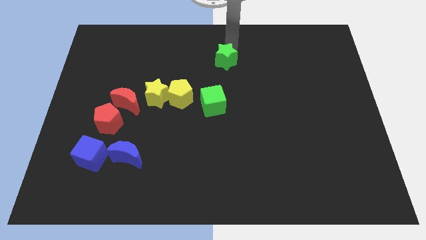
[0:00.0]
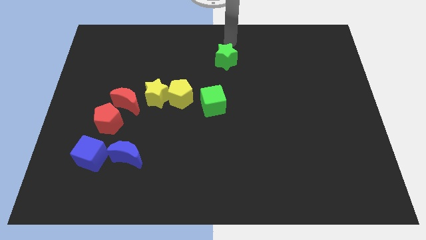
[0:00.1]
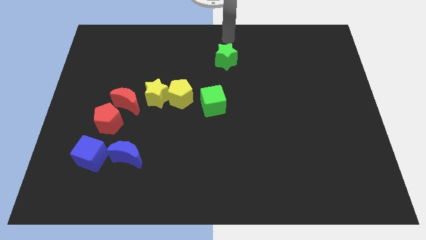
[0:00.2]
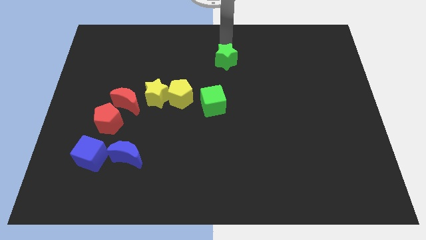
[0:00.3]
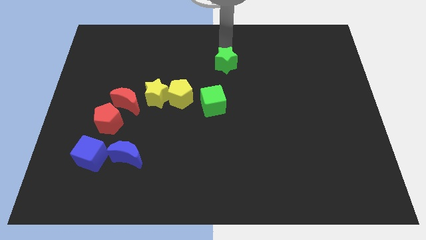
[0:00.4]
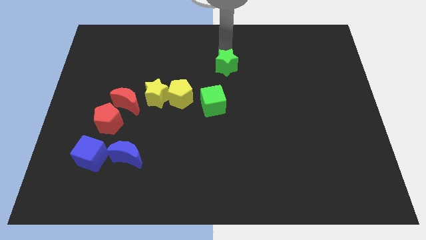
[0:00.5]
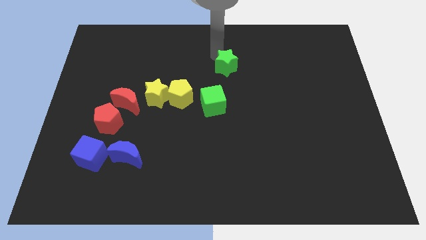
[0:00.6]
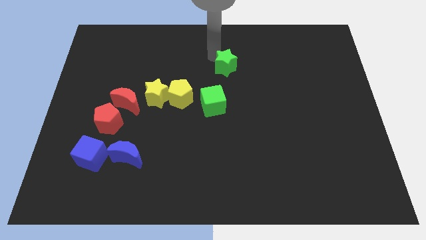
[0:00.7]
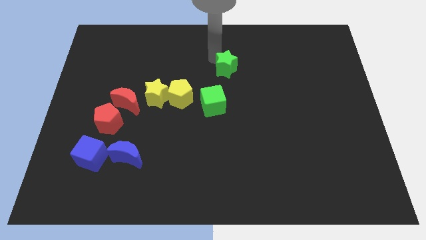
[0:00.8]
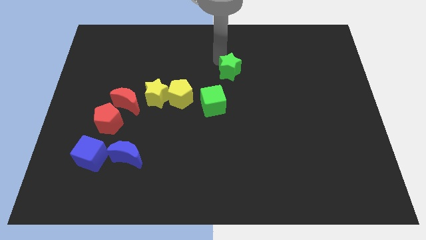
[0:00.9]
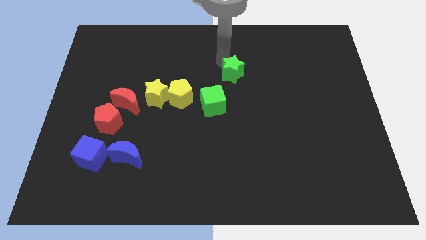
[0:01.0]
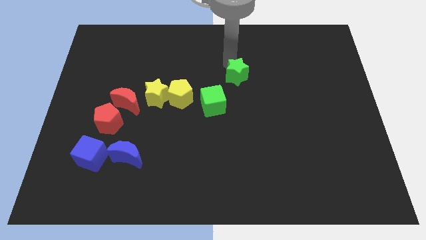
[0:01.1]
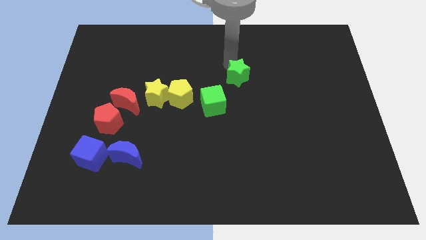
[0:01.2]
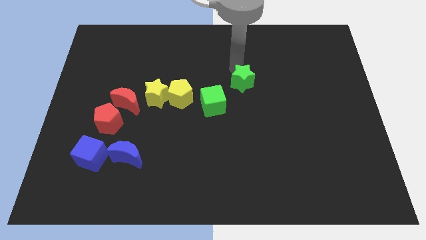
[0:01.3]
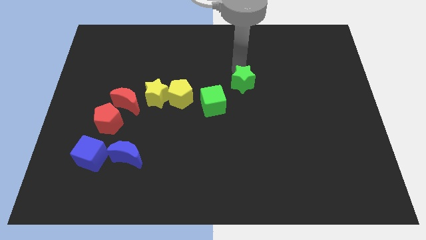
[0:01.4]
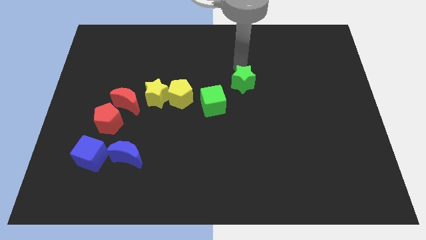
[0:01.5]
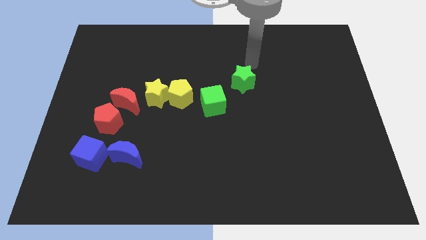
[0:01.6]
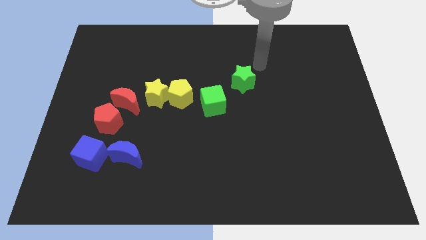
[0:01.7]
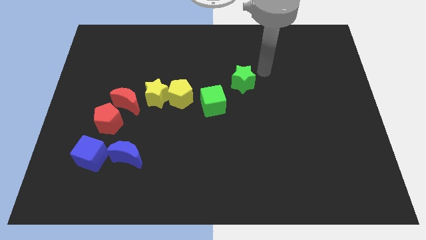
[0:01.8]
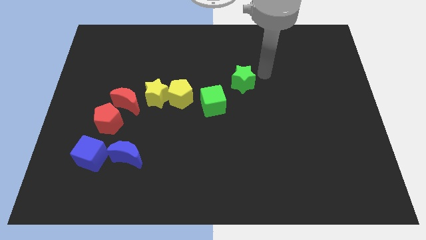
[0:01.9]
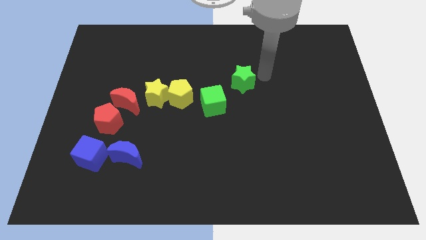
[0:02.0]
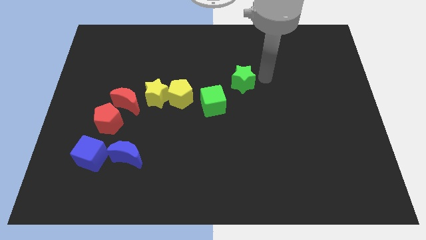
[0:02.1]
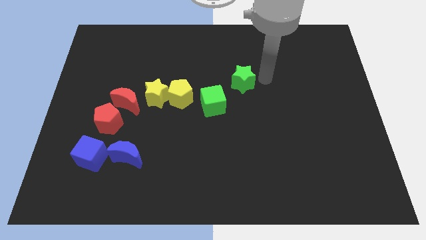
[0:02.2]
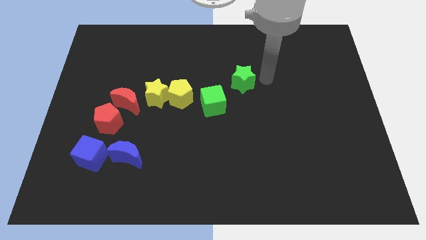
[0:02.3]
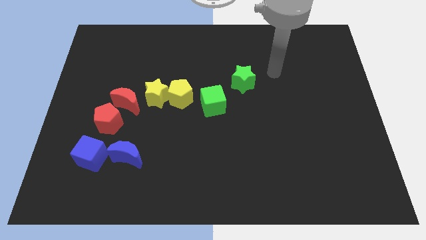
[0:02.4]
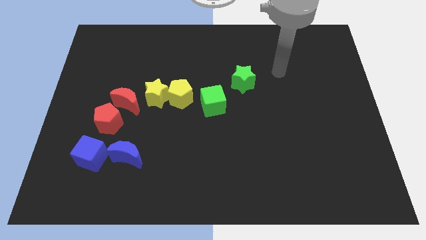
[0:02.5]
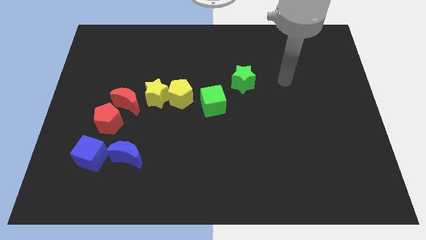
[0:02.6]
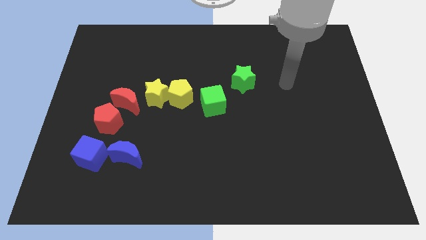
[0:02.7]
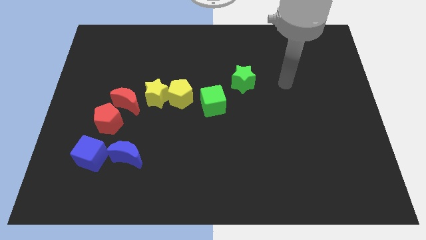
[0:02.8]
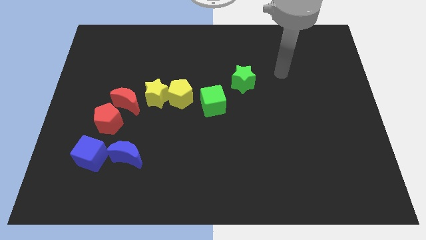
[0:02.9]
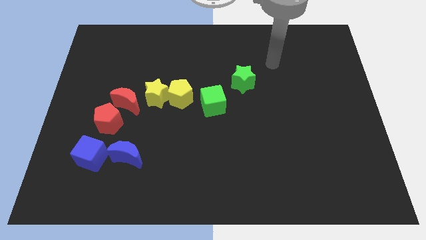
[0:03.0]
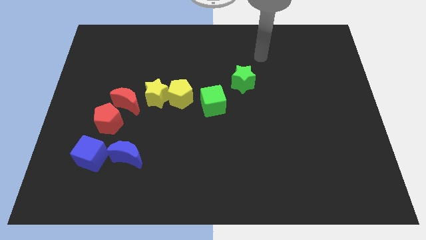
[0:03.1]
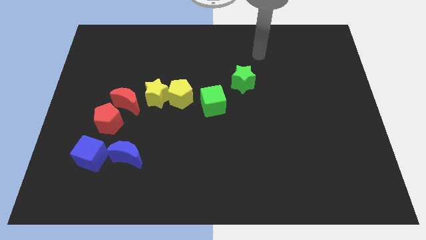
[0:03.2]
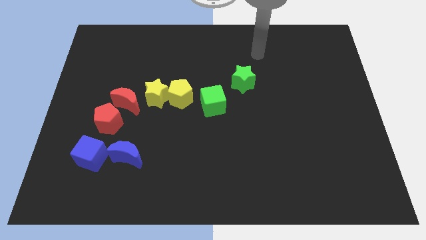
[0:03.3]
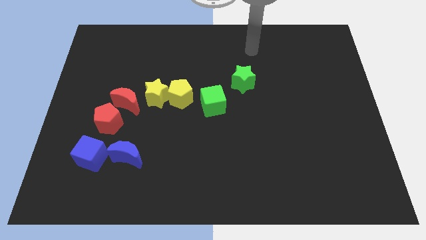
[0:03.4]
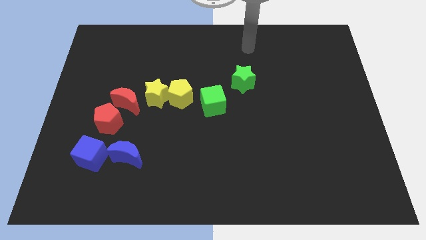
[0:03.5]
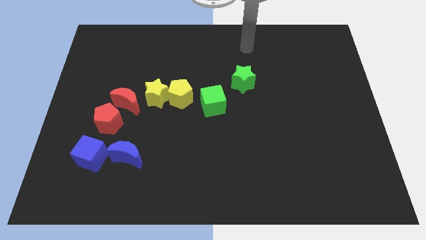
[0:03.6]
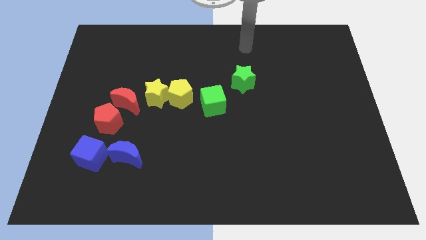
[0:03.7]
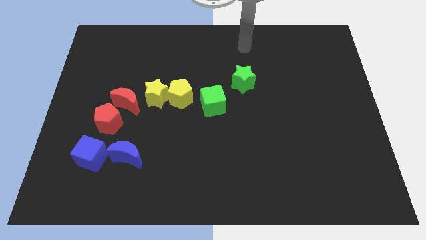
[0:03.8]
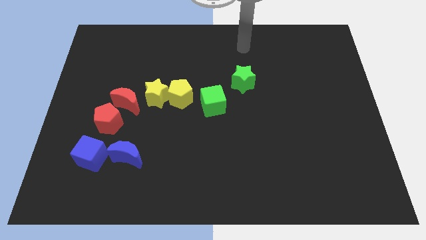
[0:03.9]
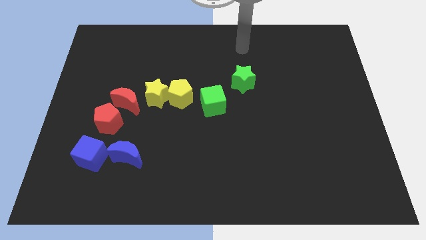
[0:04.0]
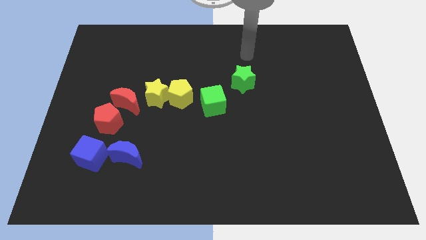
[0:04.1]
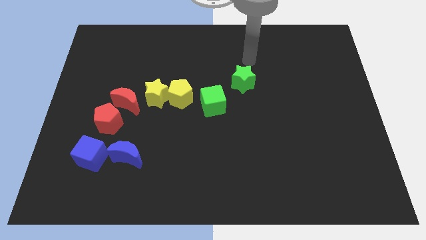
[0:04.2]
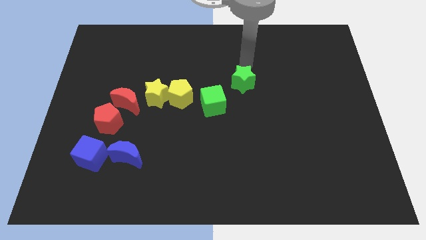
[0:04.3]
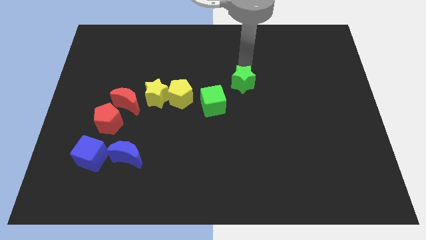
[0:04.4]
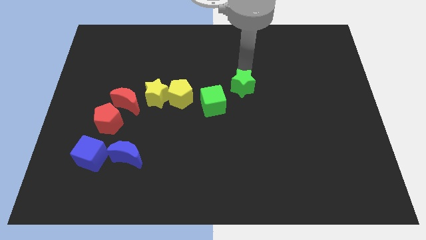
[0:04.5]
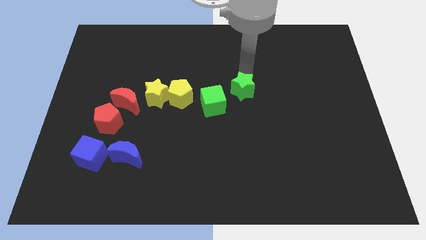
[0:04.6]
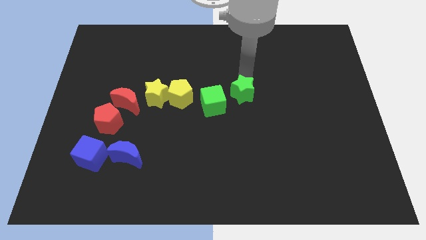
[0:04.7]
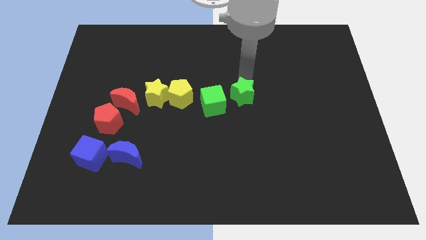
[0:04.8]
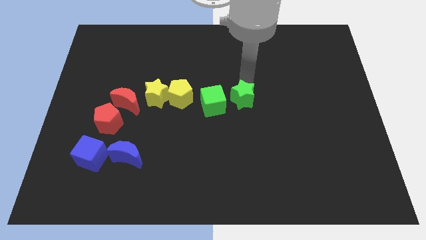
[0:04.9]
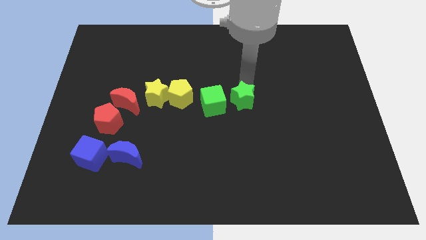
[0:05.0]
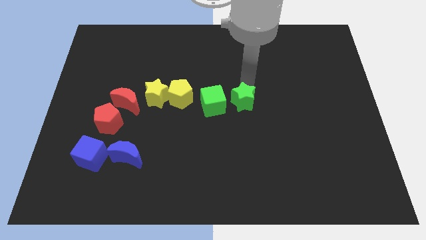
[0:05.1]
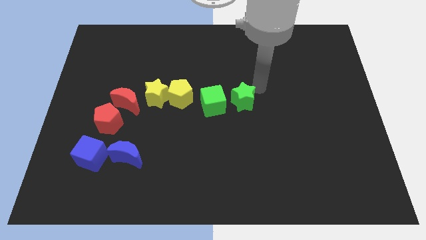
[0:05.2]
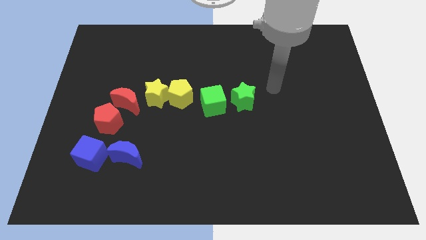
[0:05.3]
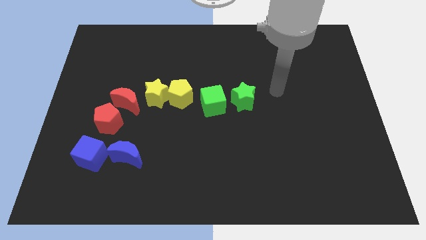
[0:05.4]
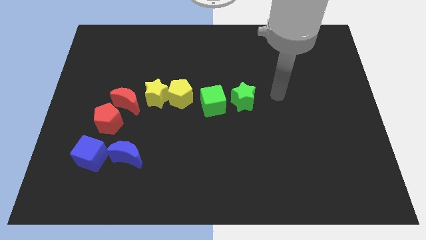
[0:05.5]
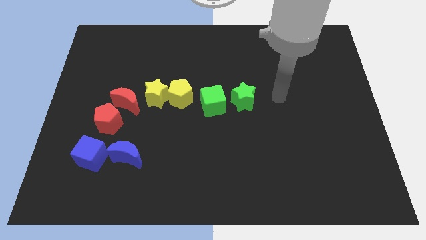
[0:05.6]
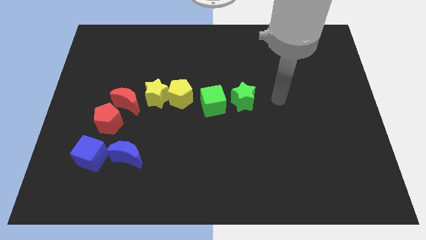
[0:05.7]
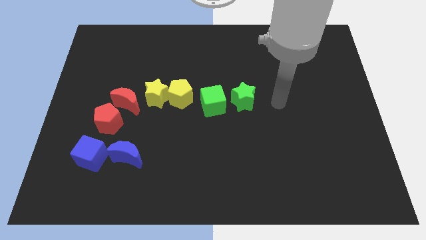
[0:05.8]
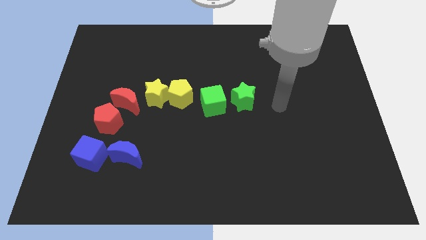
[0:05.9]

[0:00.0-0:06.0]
push the green star to the right of the green cube

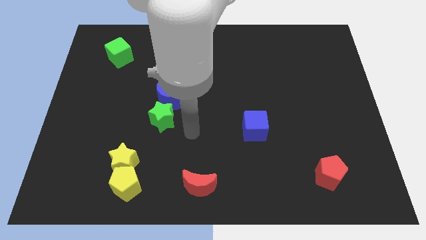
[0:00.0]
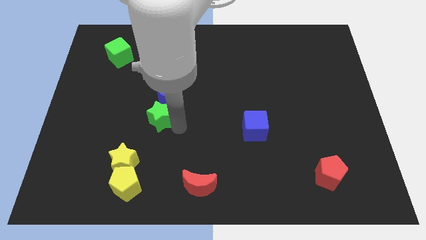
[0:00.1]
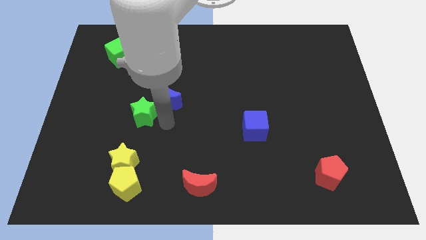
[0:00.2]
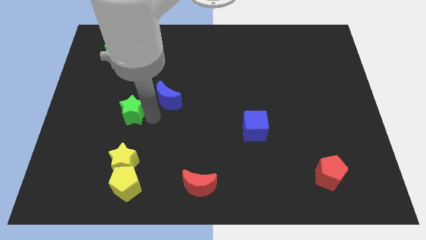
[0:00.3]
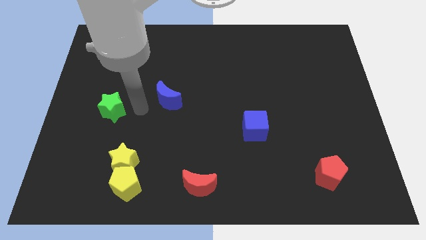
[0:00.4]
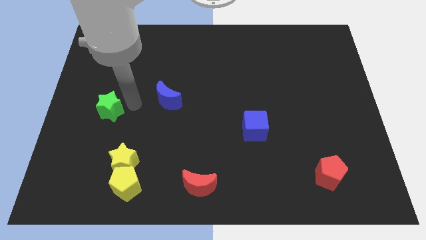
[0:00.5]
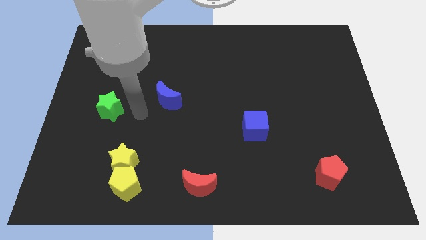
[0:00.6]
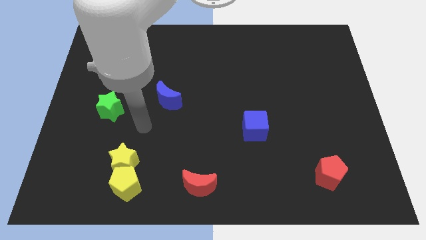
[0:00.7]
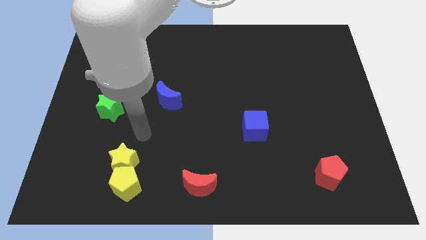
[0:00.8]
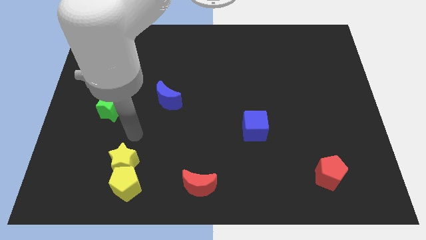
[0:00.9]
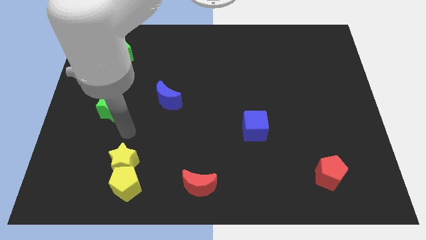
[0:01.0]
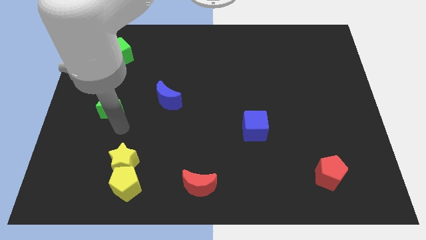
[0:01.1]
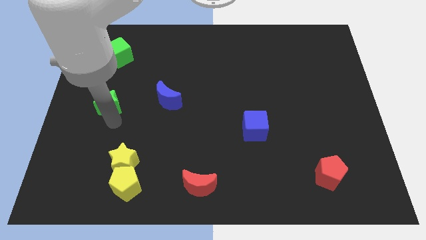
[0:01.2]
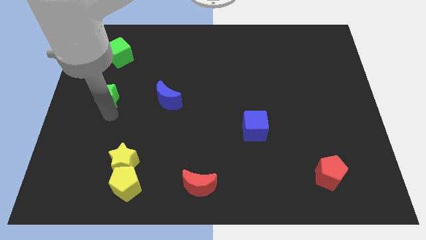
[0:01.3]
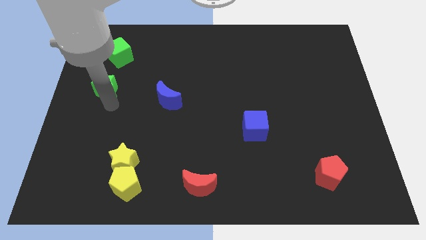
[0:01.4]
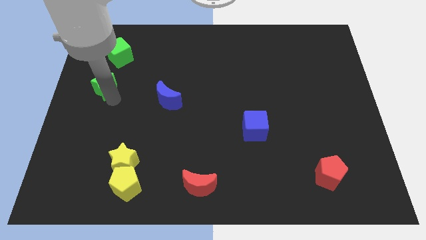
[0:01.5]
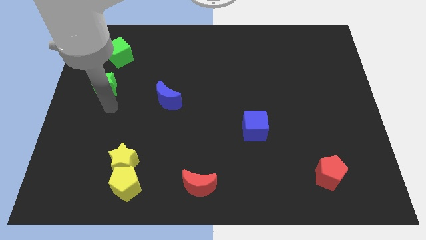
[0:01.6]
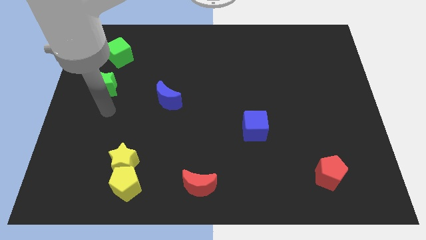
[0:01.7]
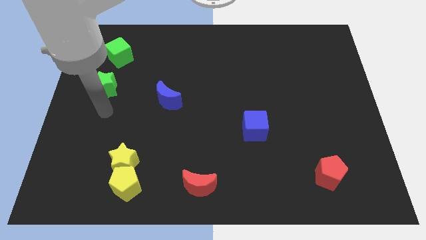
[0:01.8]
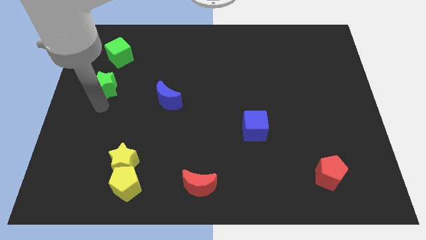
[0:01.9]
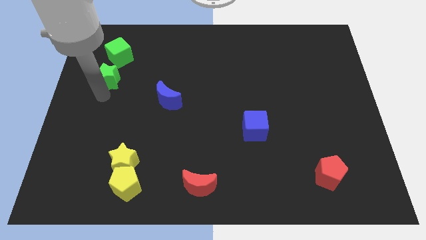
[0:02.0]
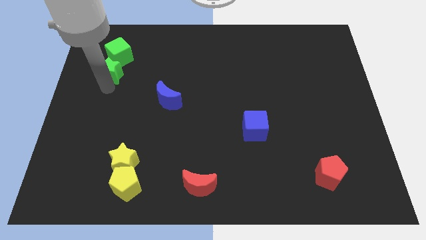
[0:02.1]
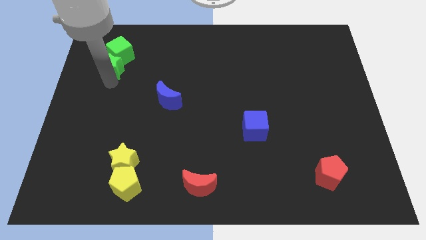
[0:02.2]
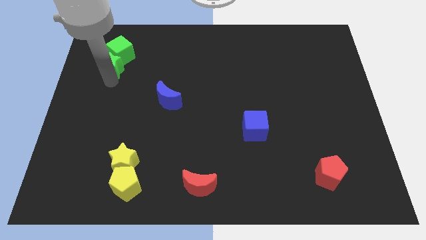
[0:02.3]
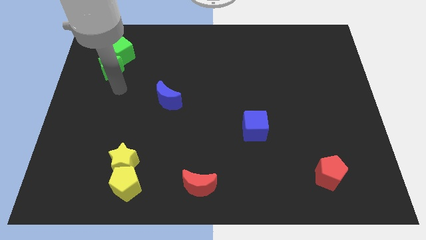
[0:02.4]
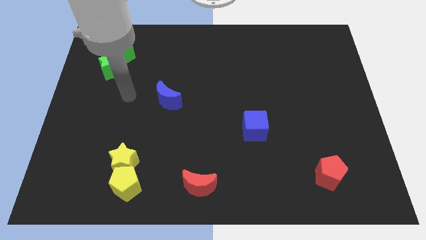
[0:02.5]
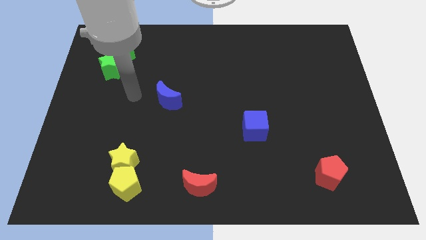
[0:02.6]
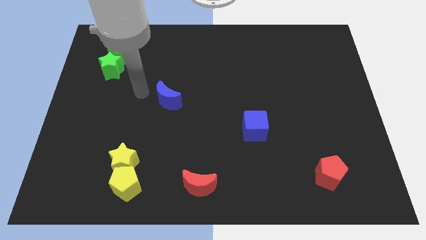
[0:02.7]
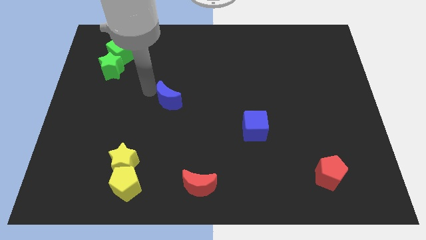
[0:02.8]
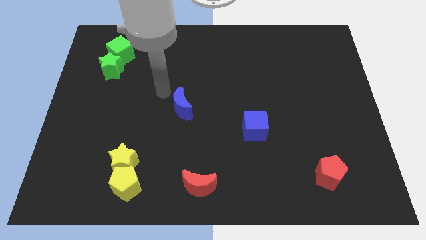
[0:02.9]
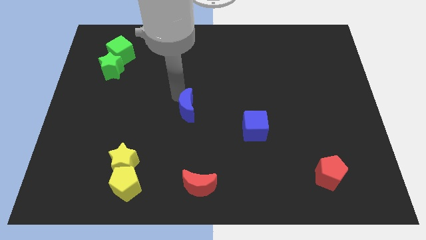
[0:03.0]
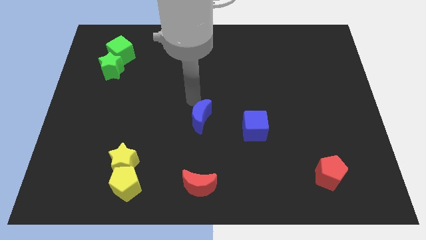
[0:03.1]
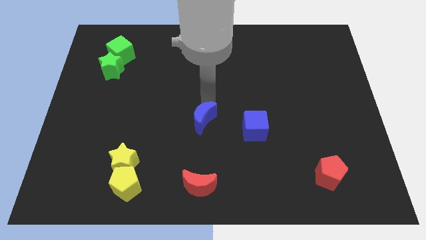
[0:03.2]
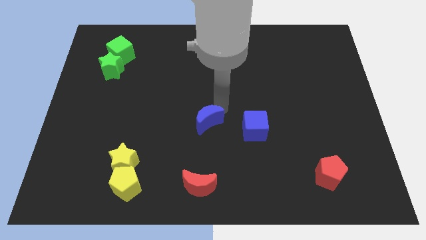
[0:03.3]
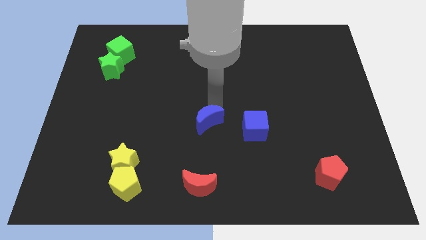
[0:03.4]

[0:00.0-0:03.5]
place the blue moon above the red moon
